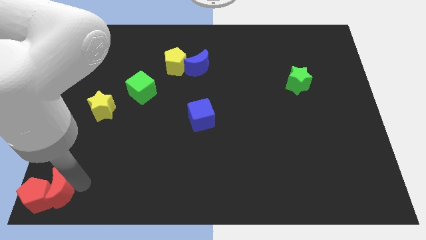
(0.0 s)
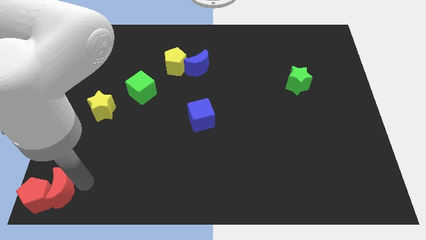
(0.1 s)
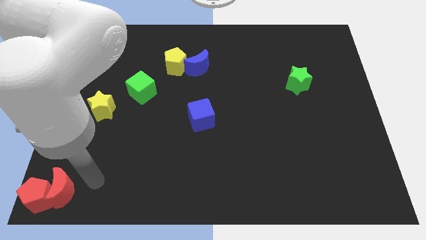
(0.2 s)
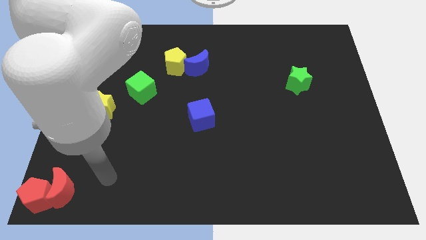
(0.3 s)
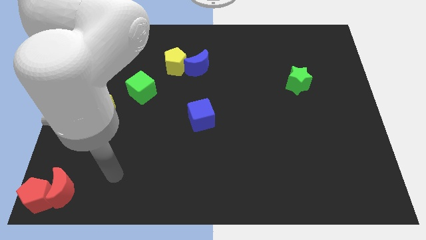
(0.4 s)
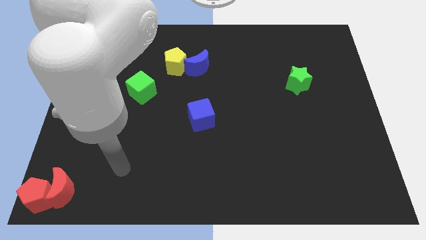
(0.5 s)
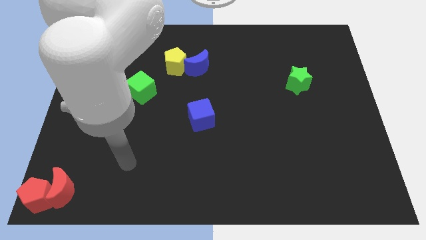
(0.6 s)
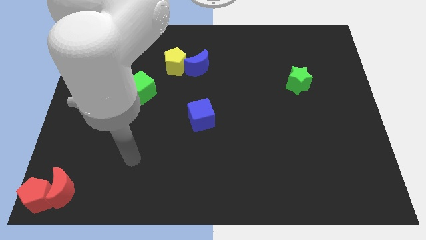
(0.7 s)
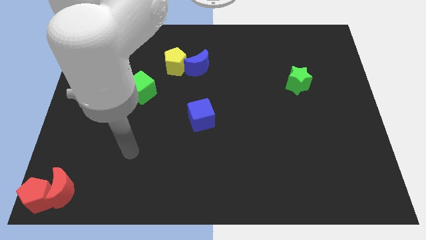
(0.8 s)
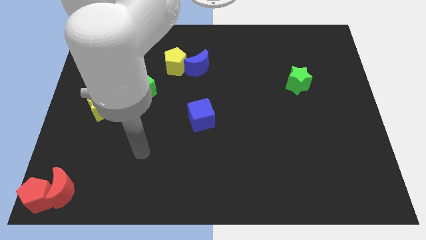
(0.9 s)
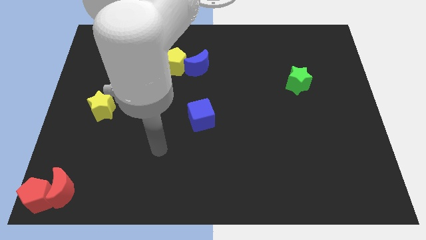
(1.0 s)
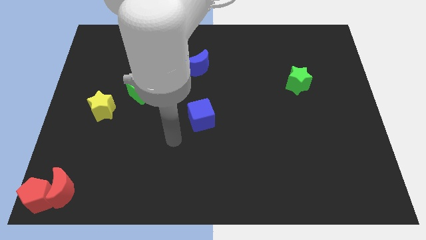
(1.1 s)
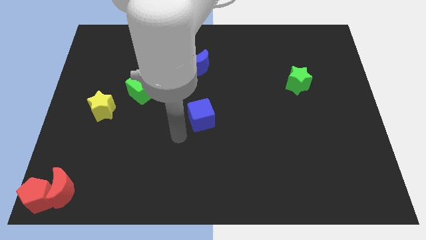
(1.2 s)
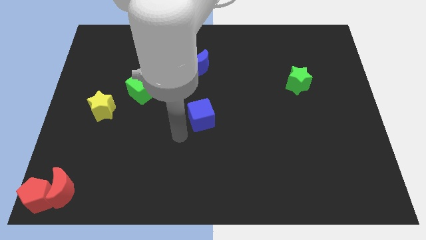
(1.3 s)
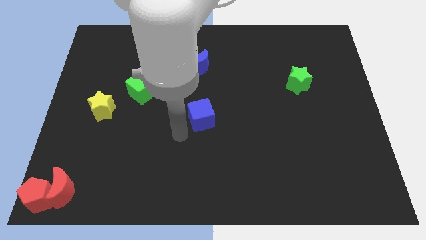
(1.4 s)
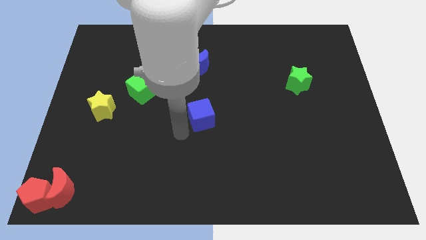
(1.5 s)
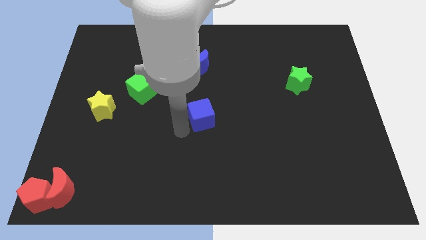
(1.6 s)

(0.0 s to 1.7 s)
move arm to the left of blue cube

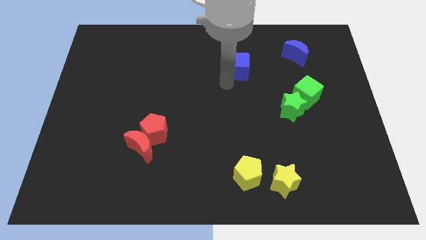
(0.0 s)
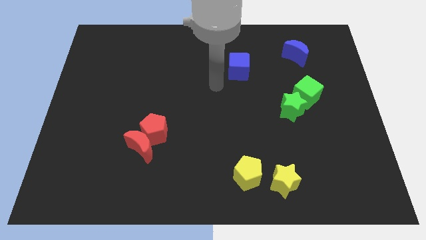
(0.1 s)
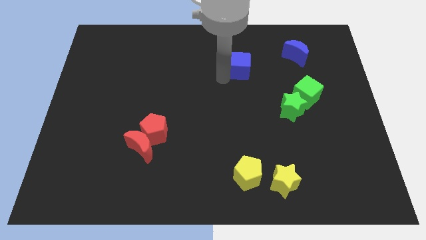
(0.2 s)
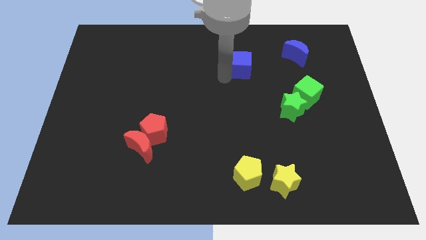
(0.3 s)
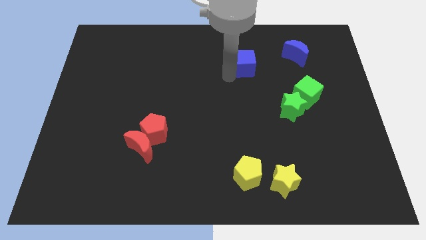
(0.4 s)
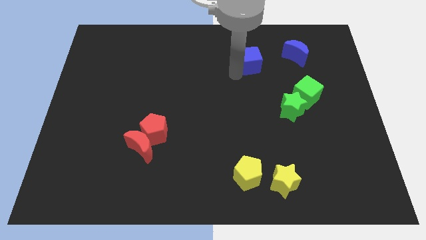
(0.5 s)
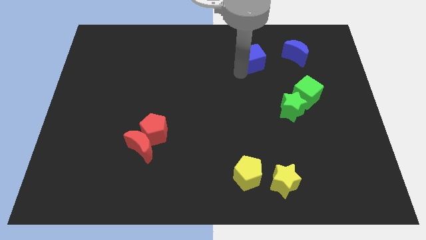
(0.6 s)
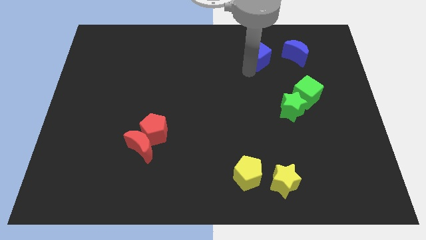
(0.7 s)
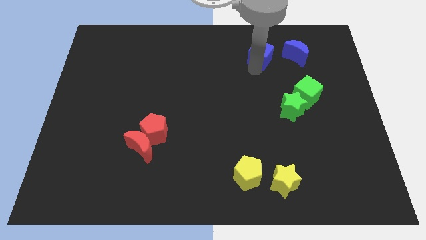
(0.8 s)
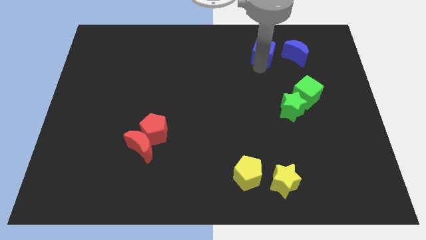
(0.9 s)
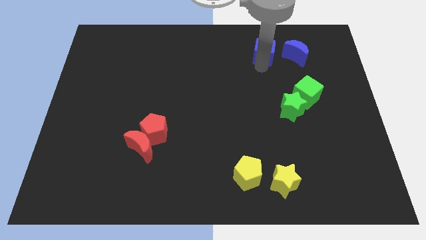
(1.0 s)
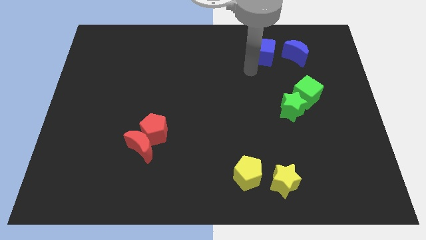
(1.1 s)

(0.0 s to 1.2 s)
place the blue cube to the left of the blue moon

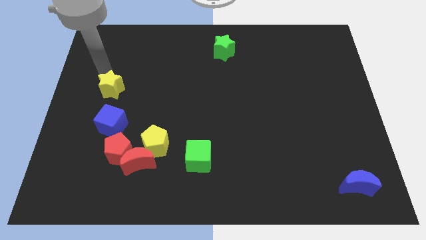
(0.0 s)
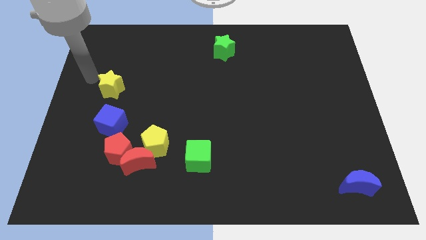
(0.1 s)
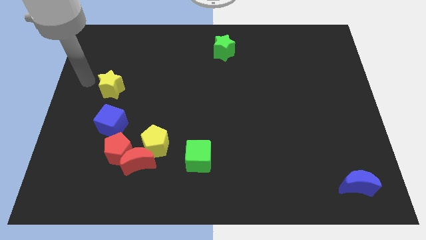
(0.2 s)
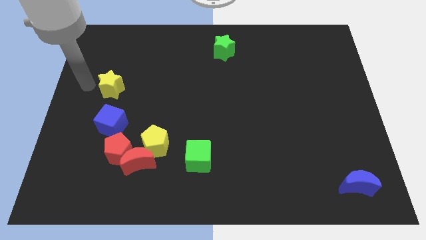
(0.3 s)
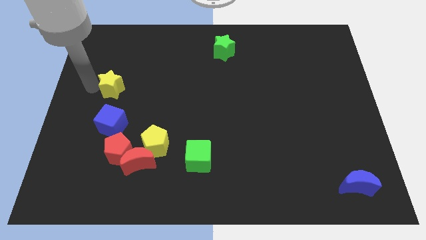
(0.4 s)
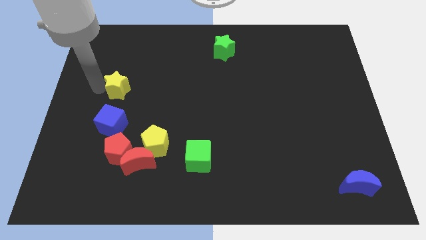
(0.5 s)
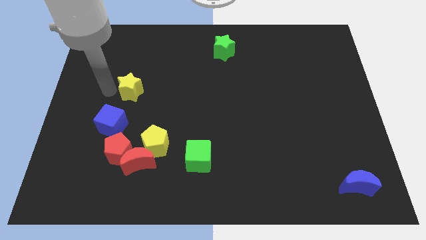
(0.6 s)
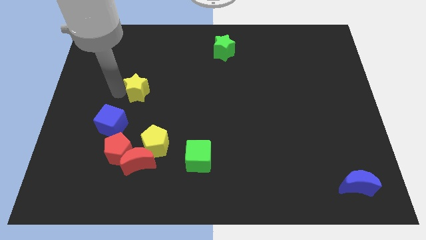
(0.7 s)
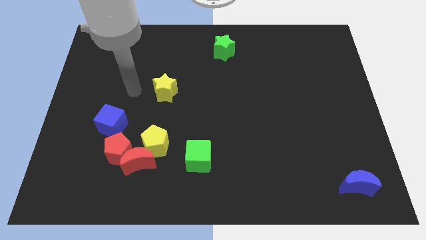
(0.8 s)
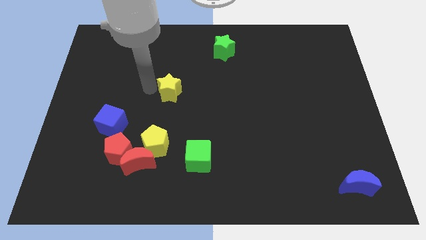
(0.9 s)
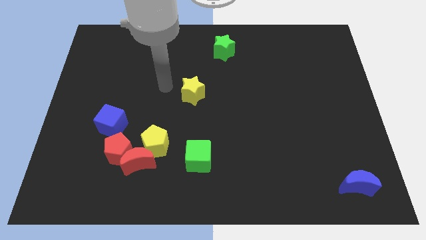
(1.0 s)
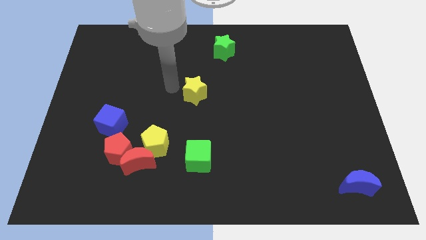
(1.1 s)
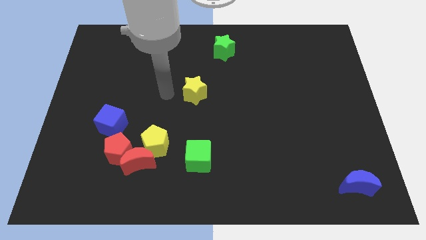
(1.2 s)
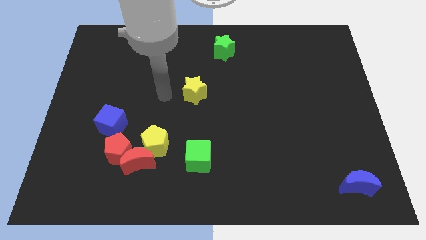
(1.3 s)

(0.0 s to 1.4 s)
slide the yellow star slightly to the right

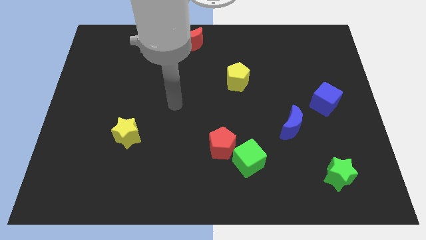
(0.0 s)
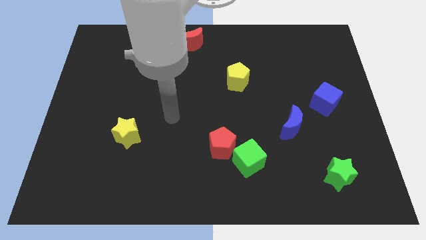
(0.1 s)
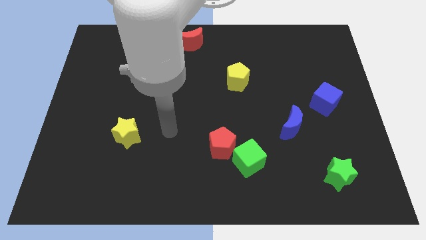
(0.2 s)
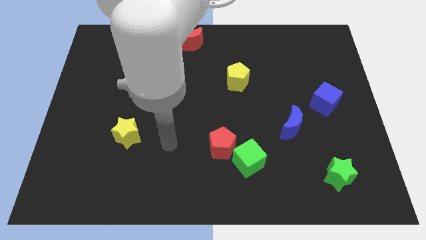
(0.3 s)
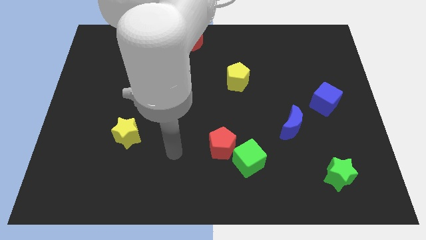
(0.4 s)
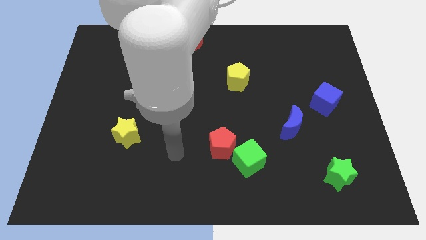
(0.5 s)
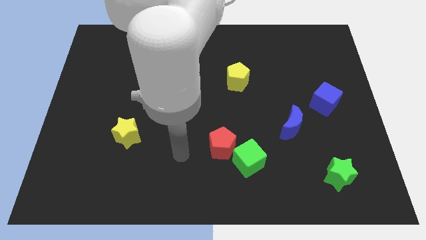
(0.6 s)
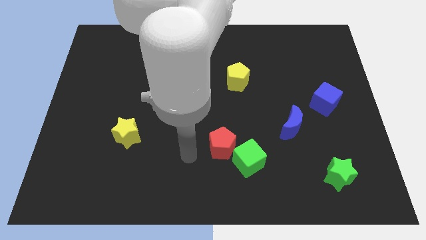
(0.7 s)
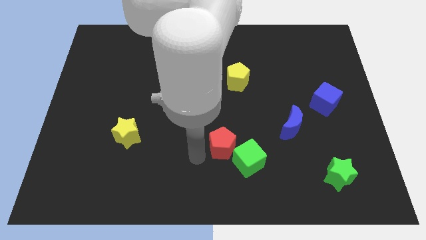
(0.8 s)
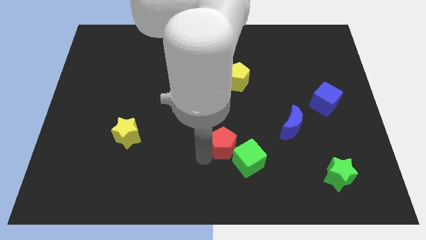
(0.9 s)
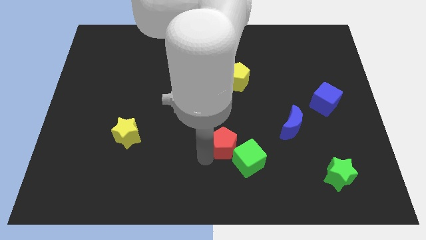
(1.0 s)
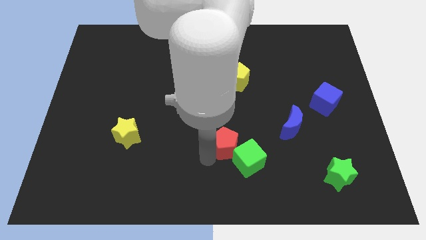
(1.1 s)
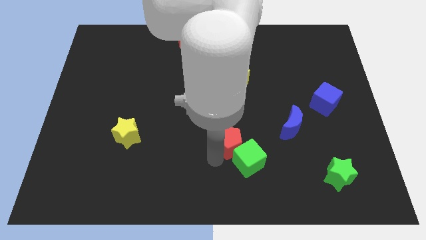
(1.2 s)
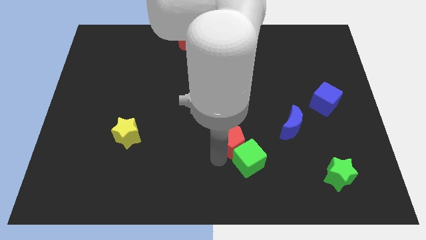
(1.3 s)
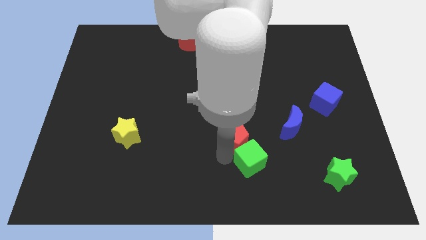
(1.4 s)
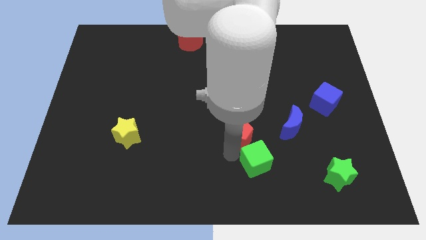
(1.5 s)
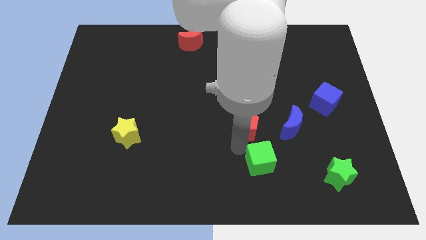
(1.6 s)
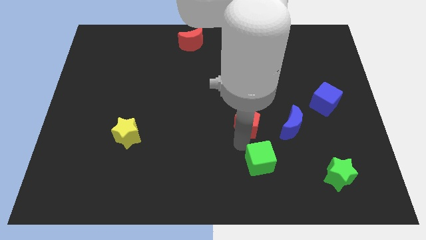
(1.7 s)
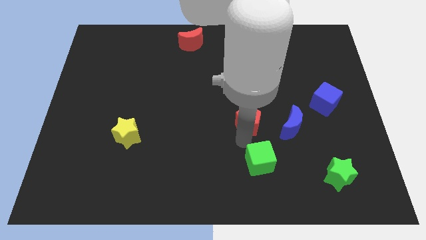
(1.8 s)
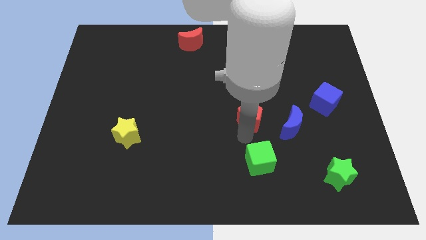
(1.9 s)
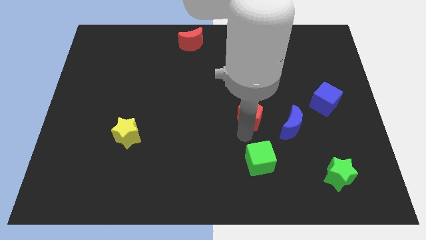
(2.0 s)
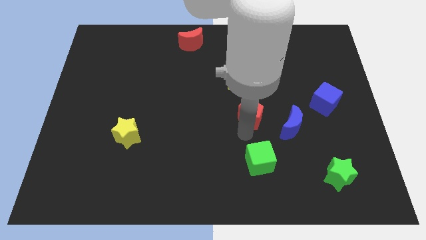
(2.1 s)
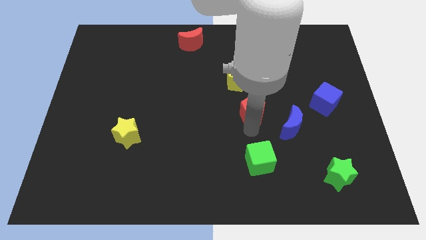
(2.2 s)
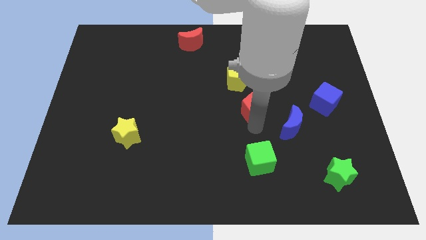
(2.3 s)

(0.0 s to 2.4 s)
place red pentagon to the top of green cube

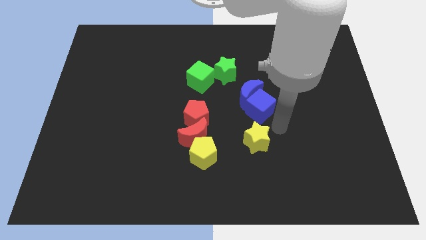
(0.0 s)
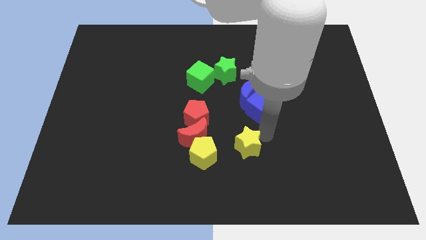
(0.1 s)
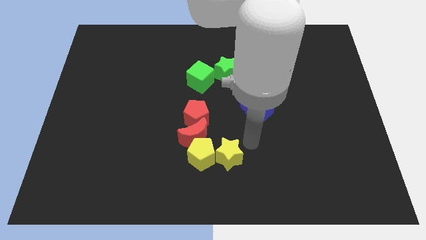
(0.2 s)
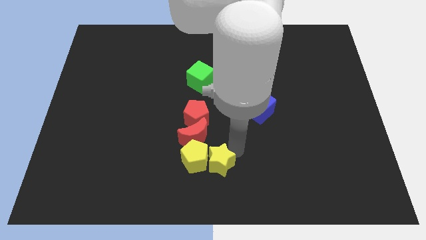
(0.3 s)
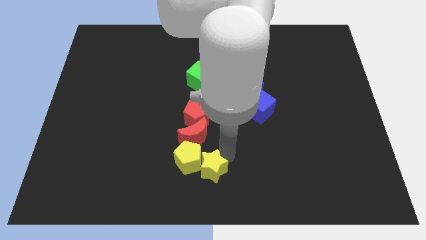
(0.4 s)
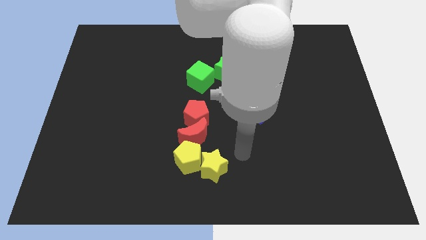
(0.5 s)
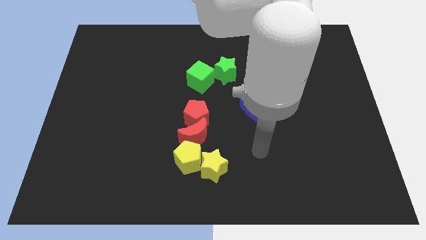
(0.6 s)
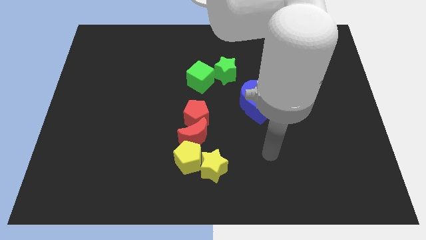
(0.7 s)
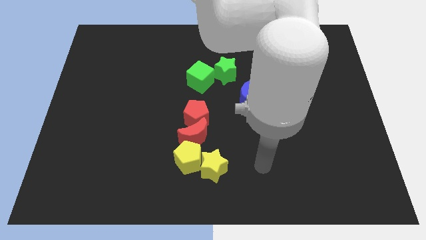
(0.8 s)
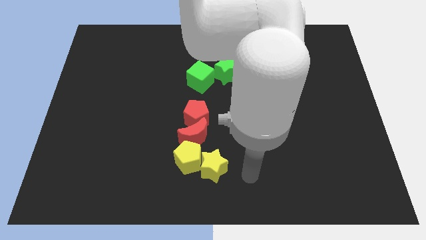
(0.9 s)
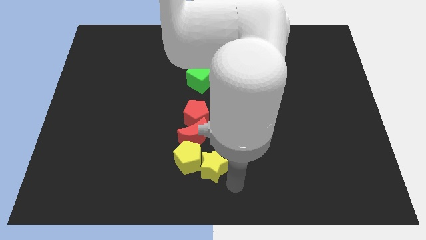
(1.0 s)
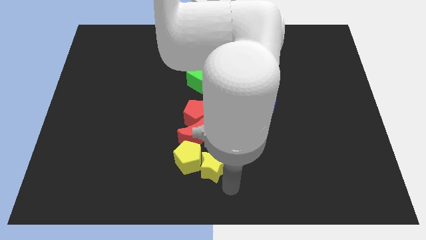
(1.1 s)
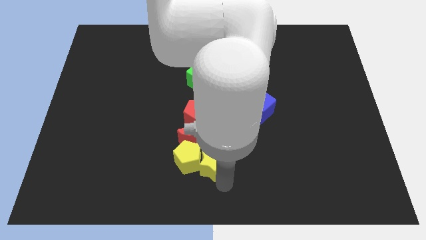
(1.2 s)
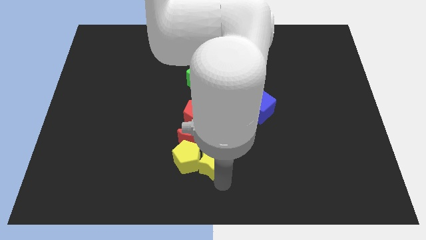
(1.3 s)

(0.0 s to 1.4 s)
move the yellow star to the right of the yellow pentagon

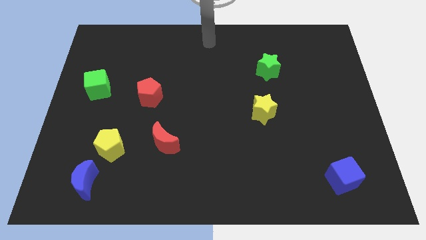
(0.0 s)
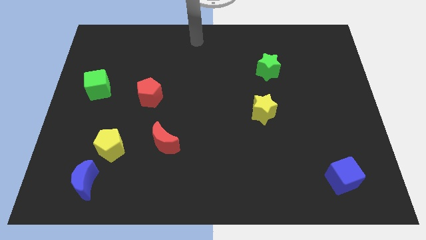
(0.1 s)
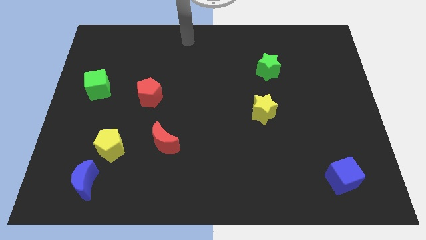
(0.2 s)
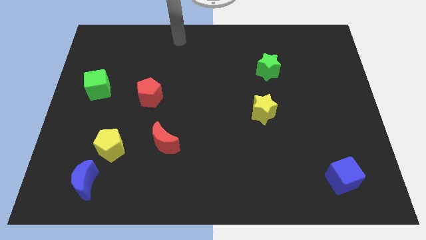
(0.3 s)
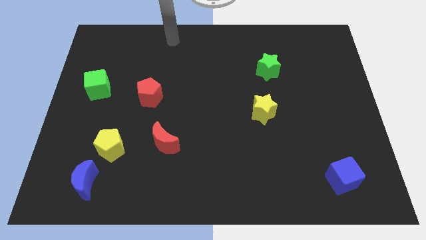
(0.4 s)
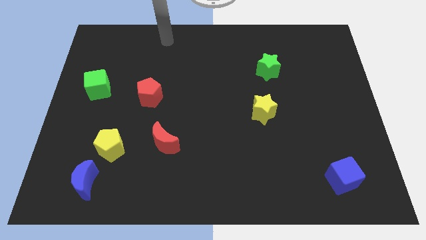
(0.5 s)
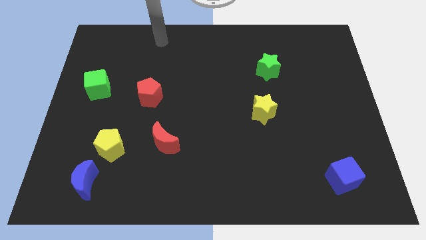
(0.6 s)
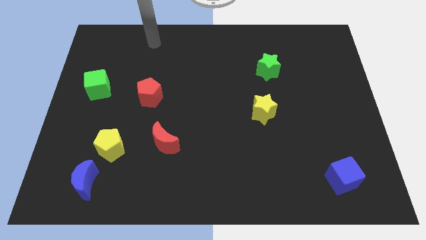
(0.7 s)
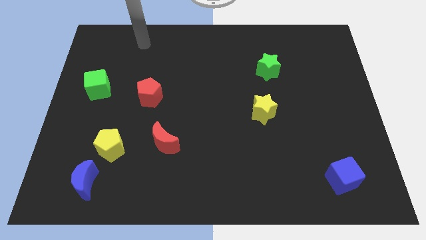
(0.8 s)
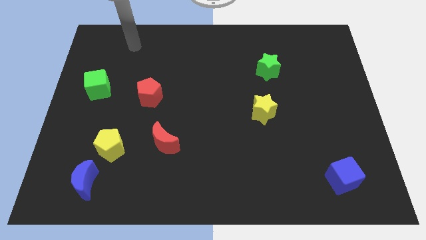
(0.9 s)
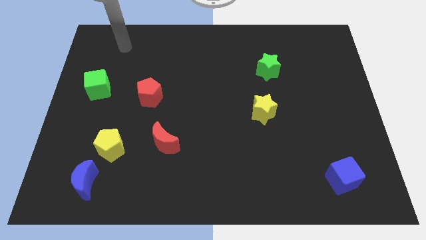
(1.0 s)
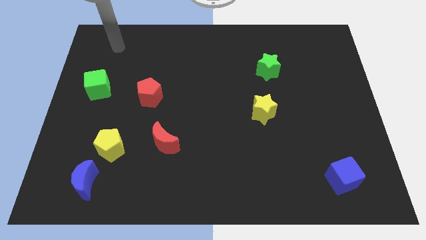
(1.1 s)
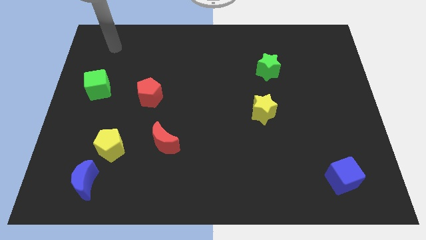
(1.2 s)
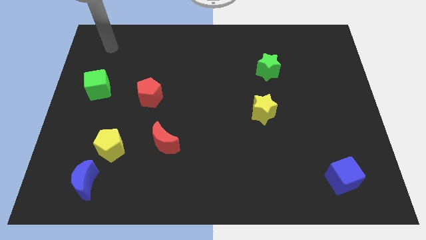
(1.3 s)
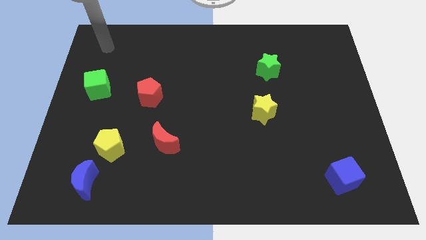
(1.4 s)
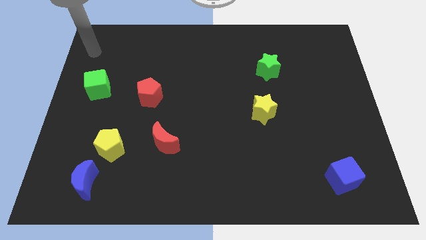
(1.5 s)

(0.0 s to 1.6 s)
place your arm at the top of the green cube
